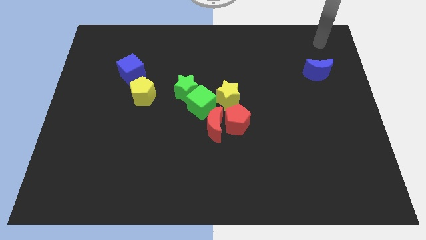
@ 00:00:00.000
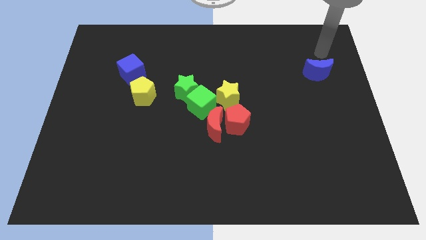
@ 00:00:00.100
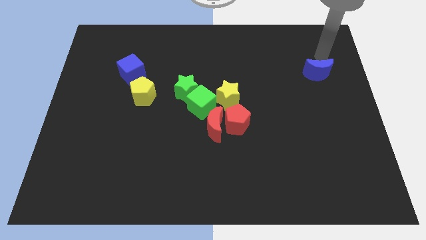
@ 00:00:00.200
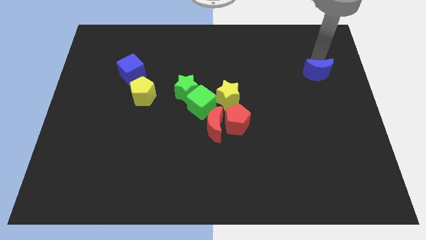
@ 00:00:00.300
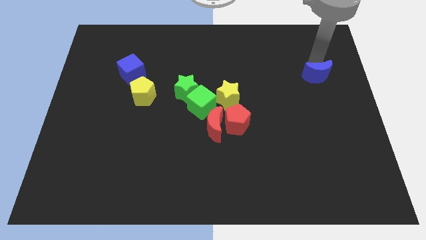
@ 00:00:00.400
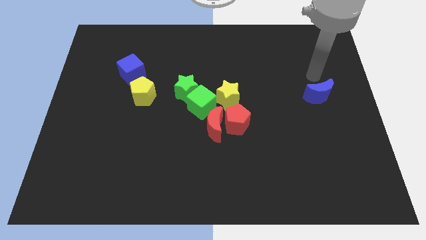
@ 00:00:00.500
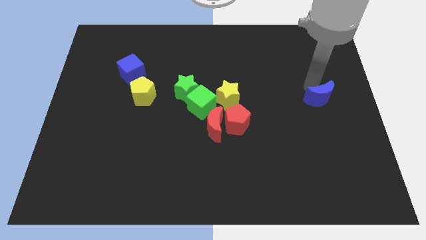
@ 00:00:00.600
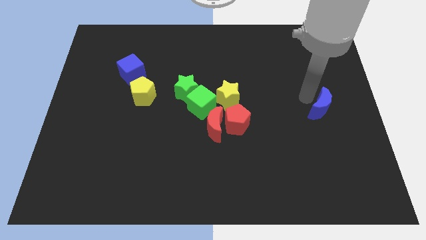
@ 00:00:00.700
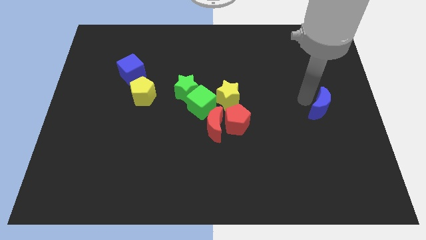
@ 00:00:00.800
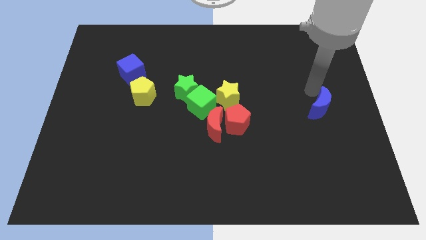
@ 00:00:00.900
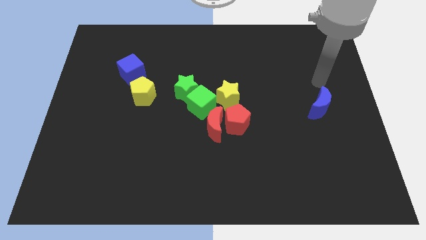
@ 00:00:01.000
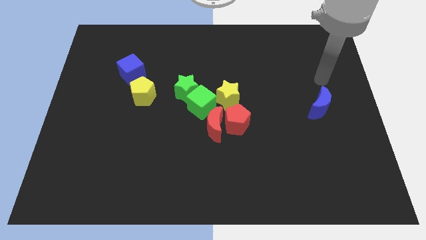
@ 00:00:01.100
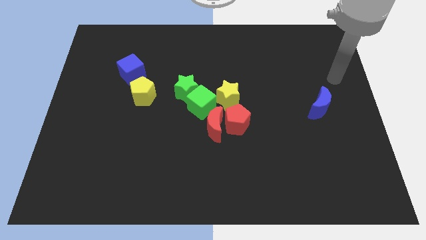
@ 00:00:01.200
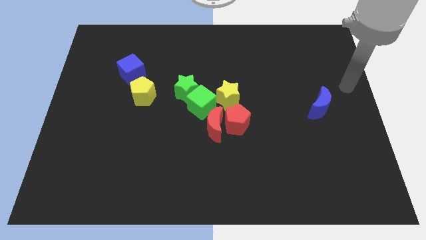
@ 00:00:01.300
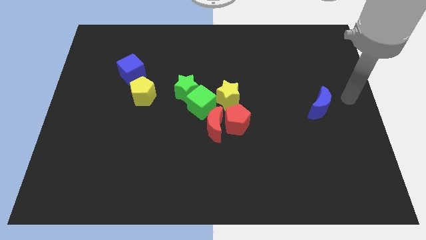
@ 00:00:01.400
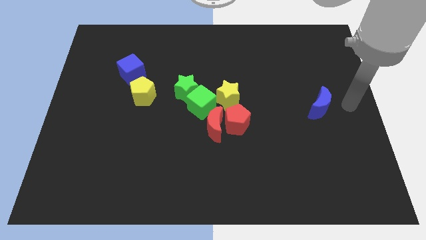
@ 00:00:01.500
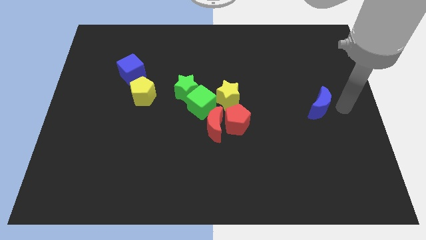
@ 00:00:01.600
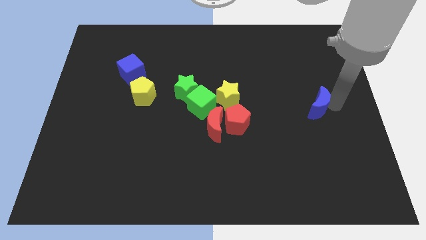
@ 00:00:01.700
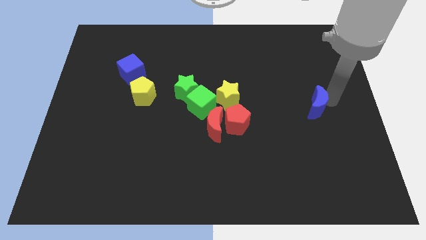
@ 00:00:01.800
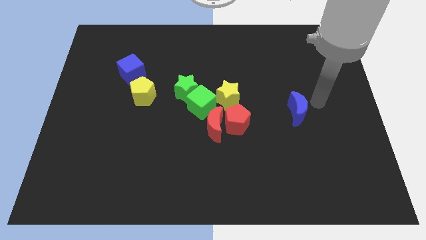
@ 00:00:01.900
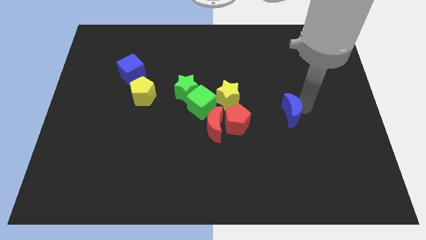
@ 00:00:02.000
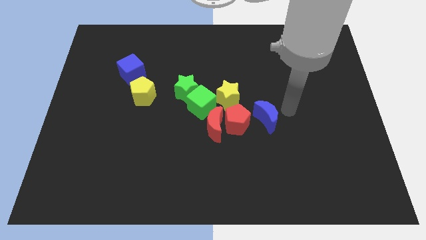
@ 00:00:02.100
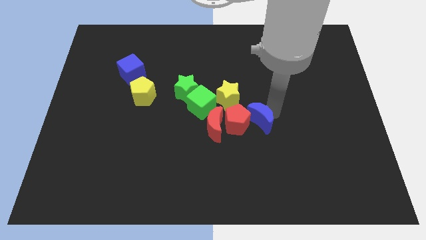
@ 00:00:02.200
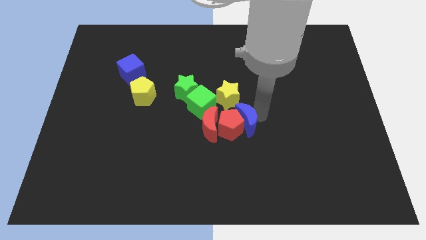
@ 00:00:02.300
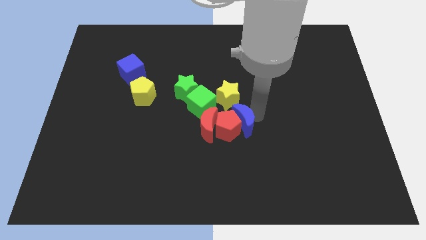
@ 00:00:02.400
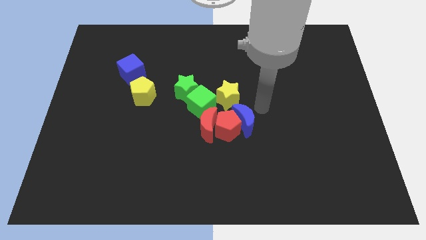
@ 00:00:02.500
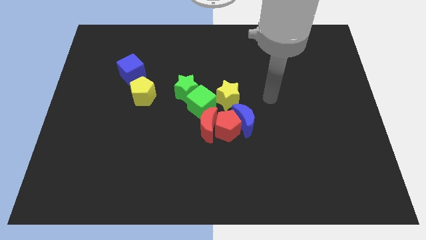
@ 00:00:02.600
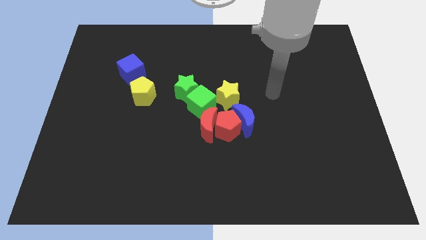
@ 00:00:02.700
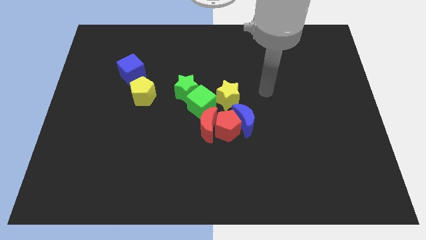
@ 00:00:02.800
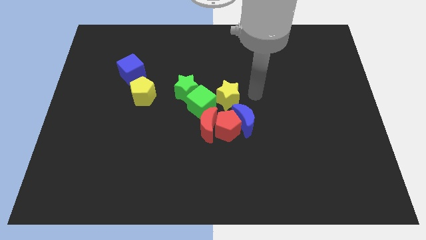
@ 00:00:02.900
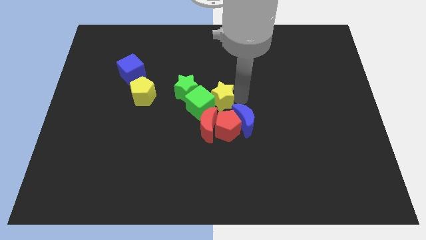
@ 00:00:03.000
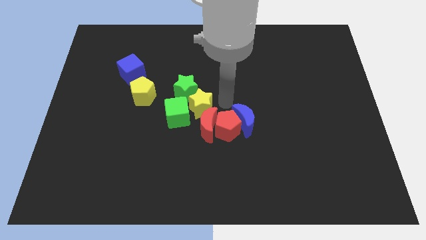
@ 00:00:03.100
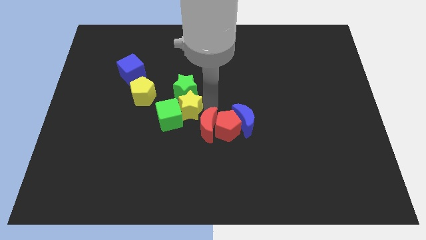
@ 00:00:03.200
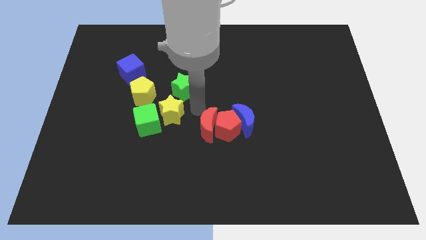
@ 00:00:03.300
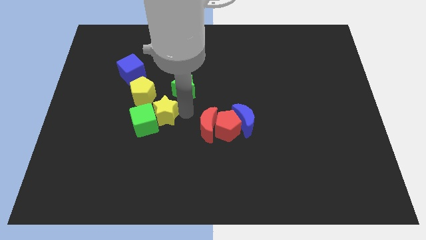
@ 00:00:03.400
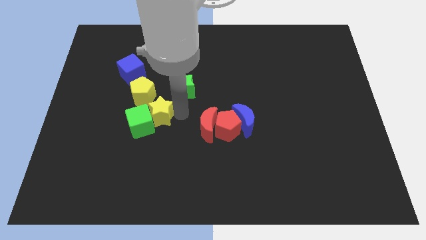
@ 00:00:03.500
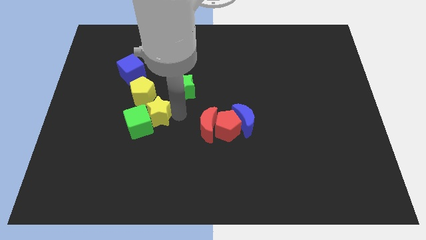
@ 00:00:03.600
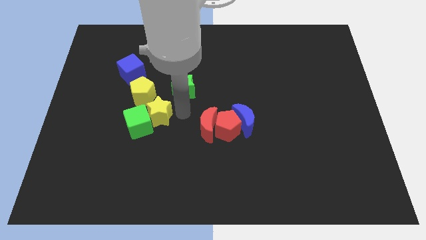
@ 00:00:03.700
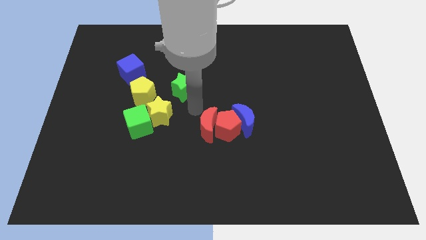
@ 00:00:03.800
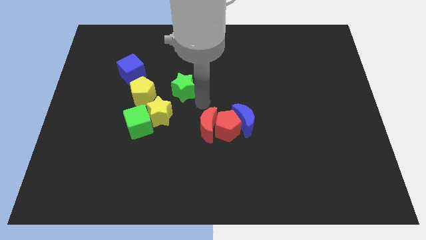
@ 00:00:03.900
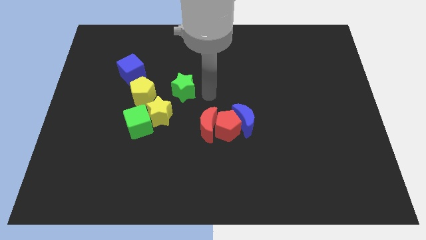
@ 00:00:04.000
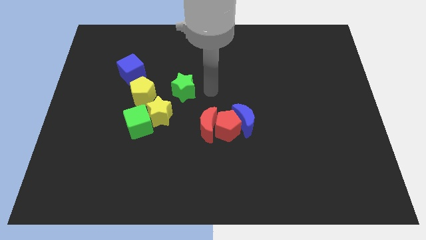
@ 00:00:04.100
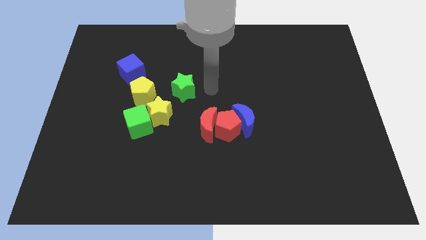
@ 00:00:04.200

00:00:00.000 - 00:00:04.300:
separate the yellow star and green cube from the green star

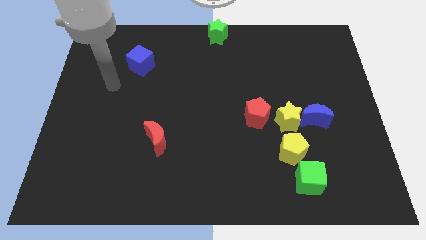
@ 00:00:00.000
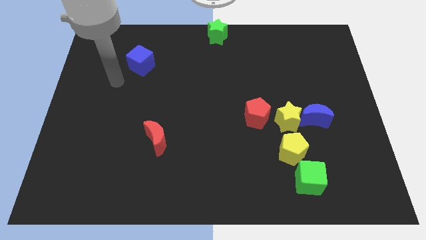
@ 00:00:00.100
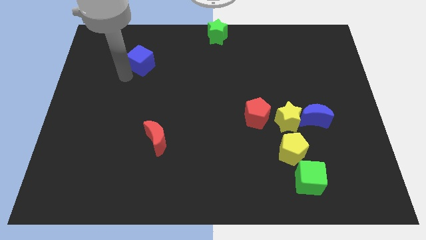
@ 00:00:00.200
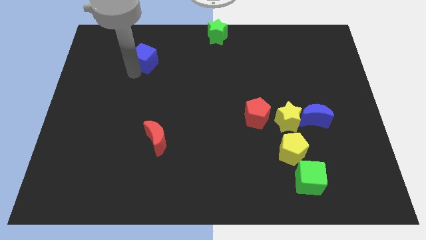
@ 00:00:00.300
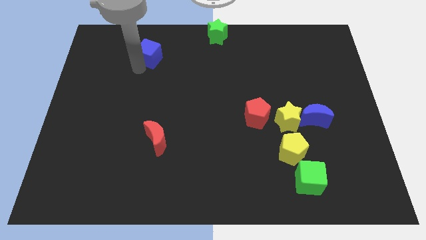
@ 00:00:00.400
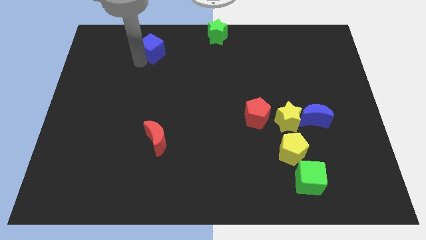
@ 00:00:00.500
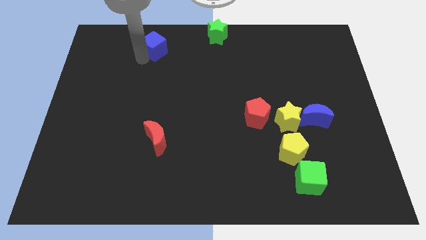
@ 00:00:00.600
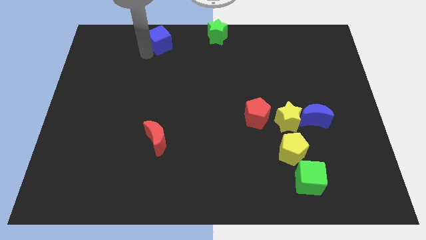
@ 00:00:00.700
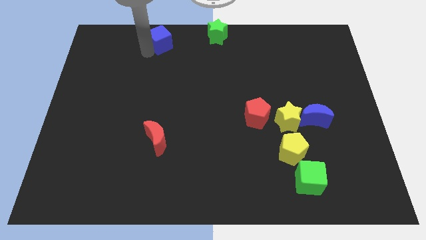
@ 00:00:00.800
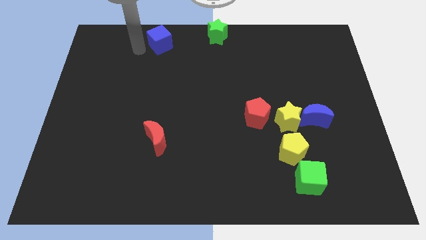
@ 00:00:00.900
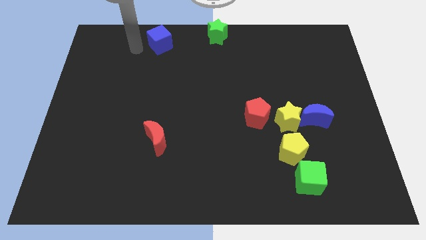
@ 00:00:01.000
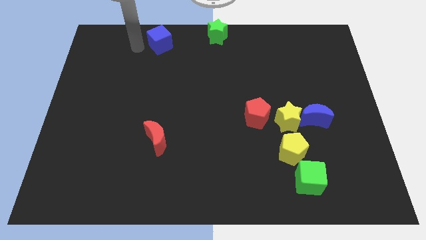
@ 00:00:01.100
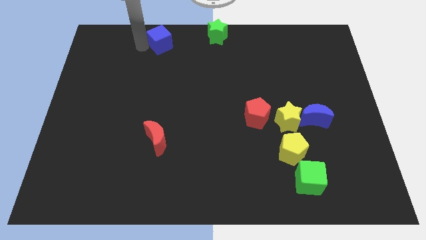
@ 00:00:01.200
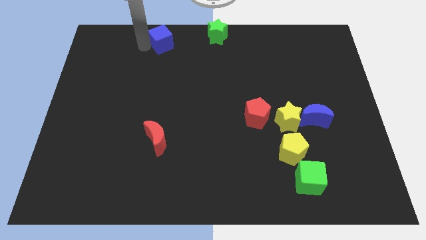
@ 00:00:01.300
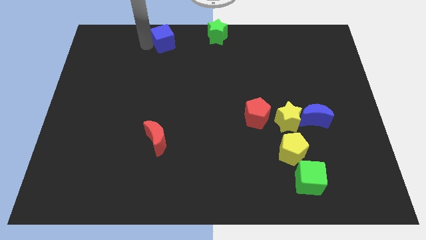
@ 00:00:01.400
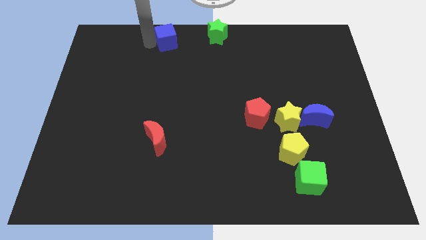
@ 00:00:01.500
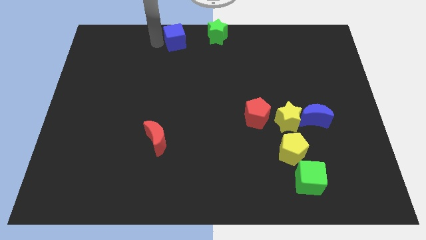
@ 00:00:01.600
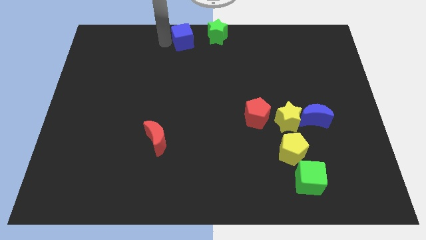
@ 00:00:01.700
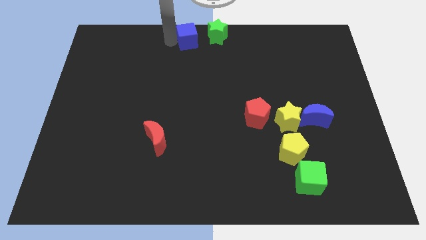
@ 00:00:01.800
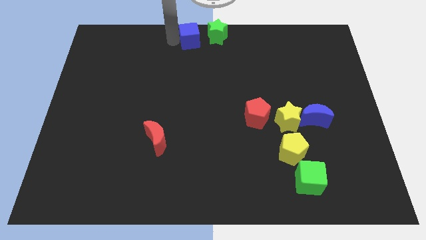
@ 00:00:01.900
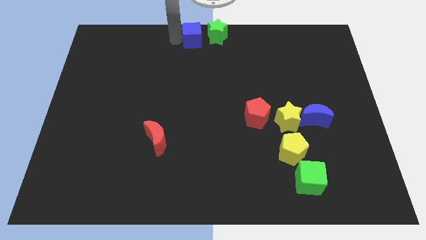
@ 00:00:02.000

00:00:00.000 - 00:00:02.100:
move the blue cube towards the top center of the board

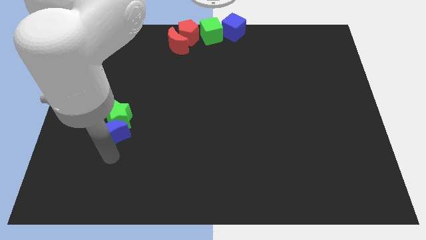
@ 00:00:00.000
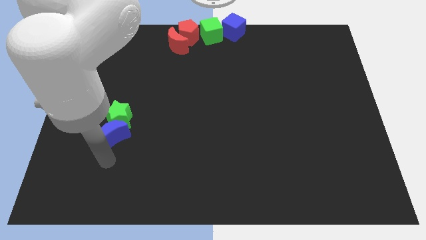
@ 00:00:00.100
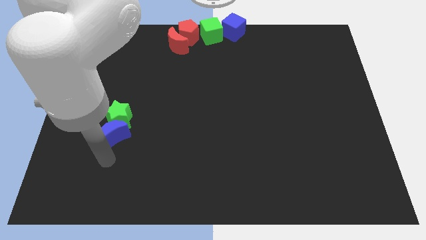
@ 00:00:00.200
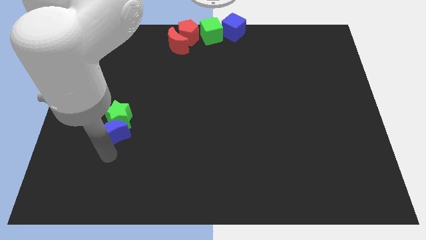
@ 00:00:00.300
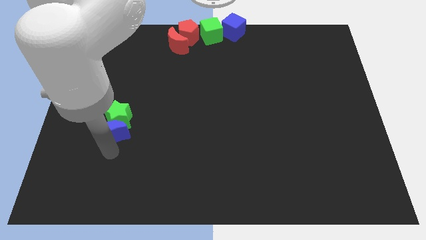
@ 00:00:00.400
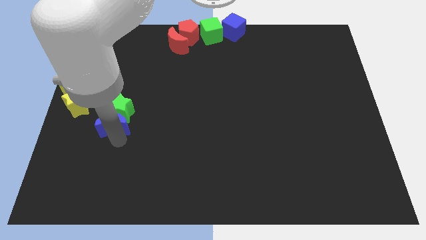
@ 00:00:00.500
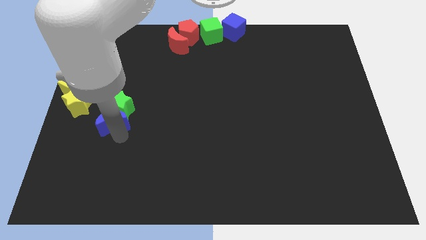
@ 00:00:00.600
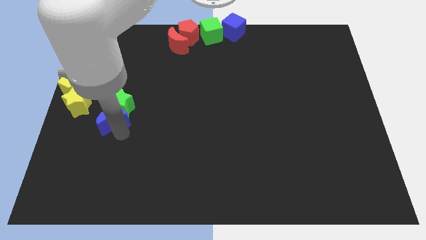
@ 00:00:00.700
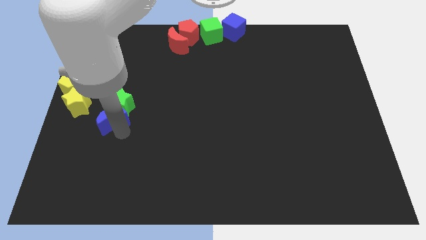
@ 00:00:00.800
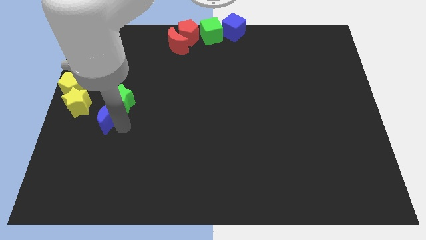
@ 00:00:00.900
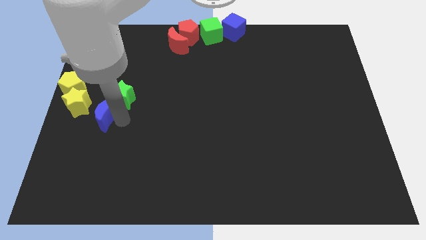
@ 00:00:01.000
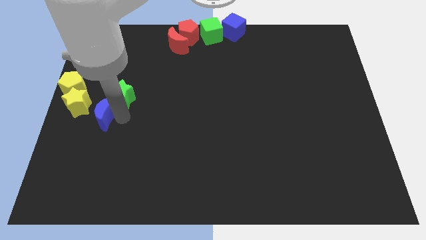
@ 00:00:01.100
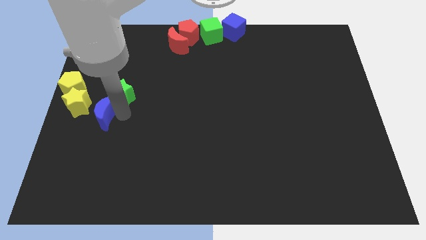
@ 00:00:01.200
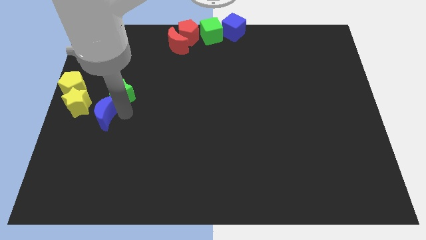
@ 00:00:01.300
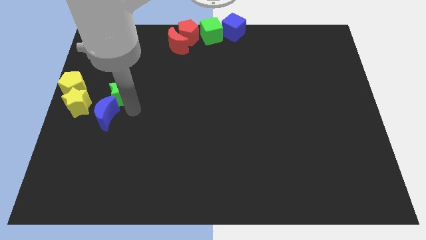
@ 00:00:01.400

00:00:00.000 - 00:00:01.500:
push green star with the blue moon towards the top side of the board

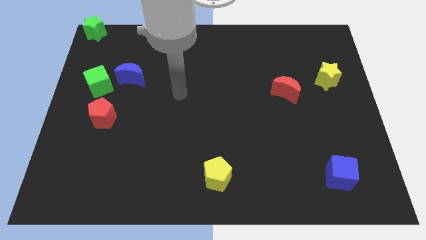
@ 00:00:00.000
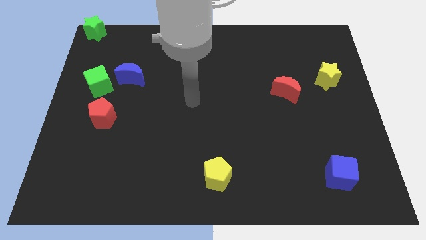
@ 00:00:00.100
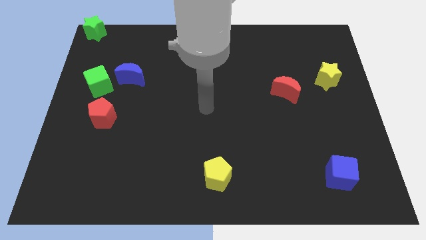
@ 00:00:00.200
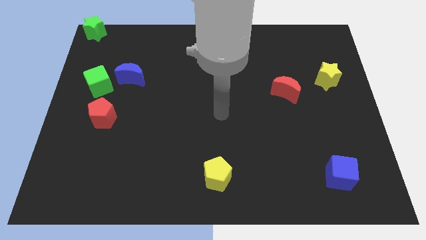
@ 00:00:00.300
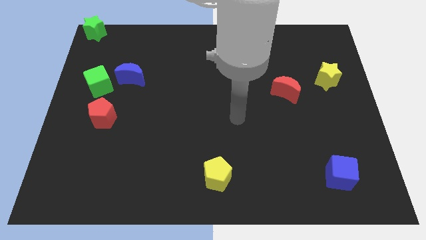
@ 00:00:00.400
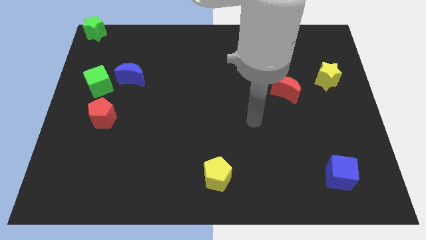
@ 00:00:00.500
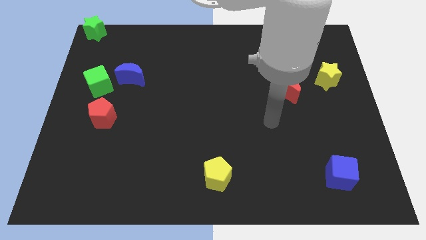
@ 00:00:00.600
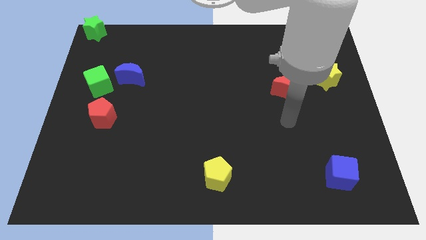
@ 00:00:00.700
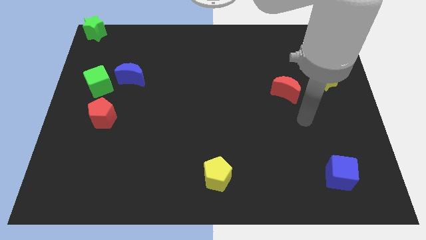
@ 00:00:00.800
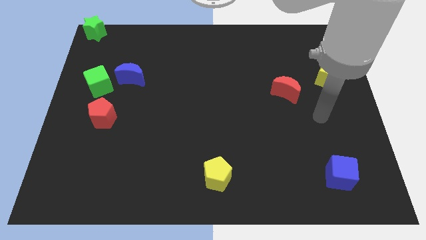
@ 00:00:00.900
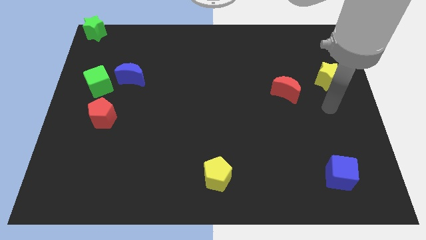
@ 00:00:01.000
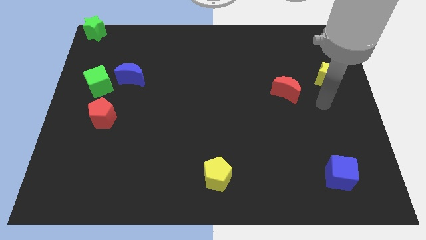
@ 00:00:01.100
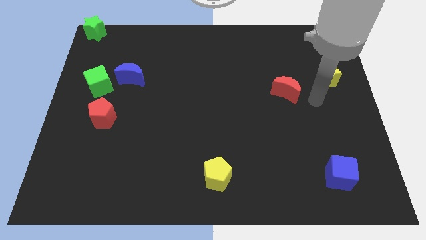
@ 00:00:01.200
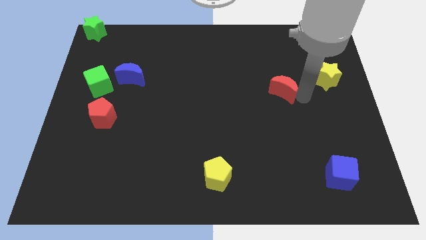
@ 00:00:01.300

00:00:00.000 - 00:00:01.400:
move the arm to the right of red moon
